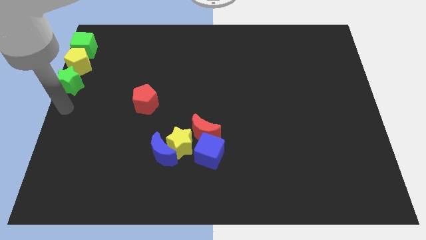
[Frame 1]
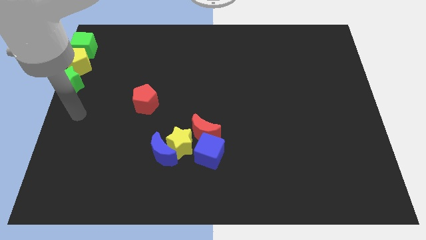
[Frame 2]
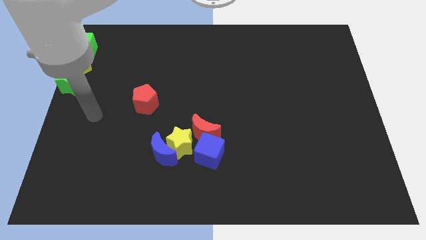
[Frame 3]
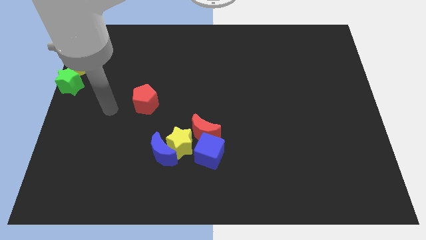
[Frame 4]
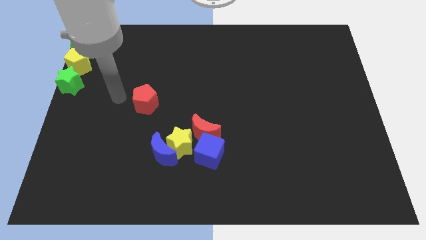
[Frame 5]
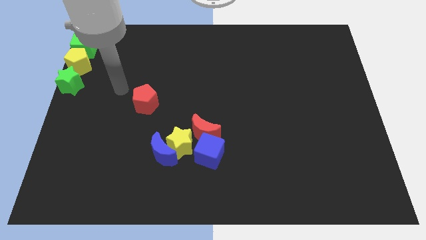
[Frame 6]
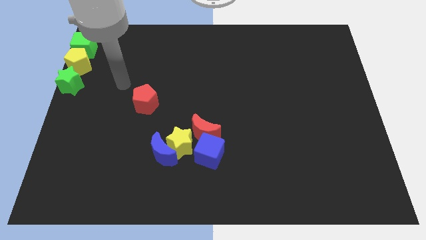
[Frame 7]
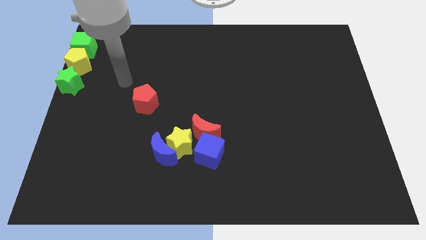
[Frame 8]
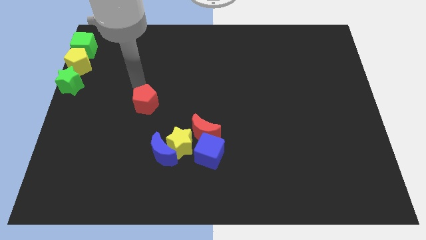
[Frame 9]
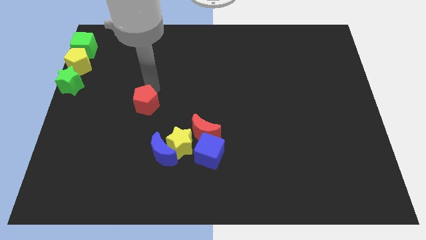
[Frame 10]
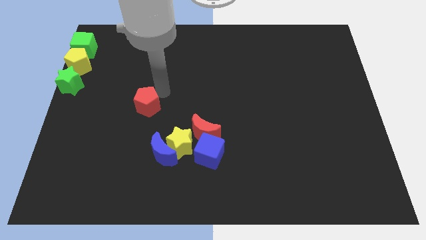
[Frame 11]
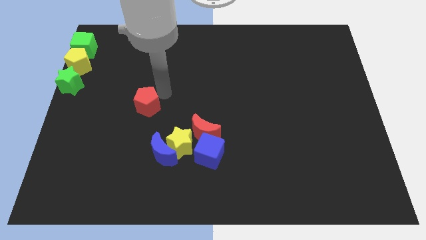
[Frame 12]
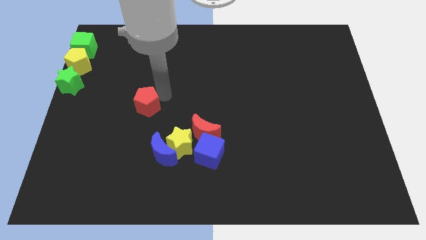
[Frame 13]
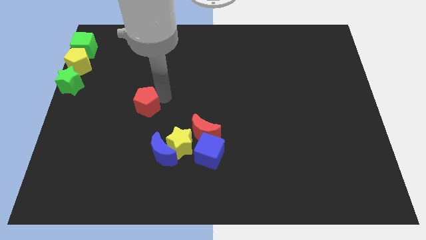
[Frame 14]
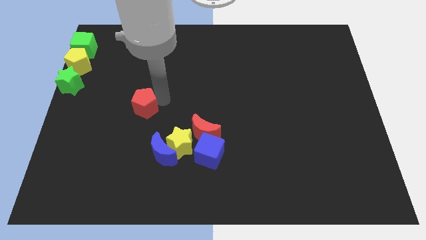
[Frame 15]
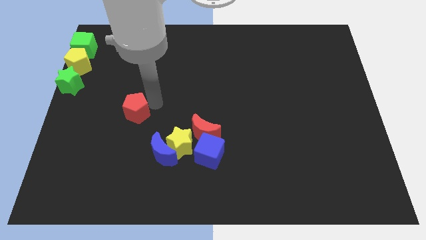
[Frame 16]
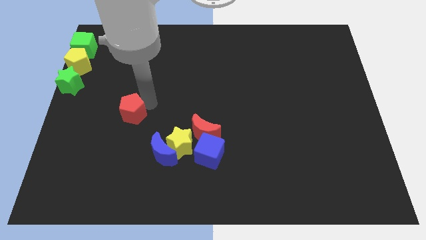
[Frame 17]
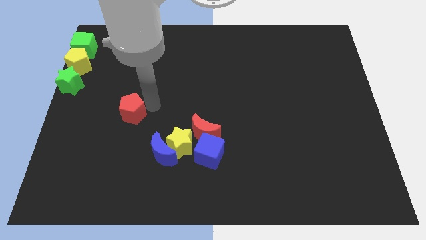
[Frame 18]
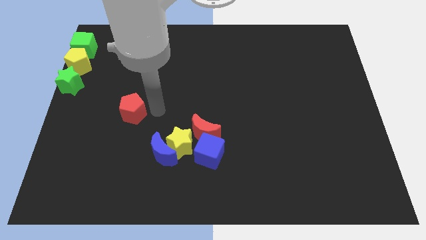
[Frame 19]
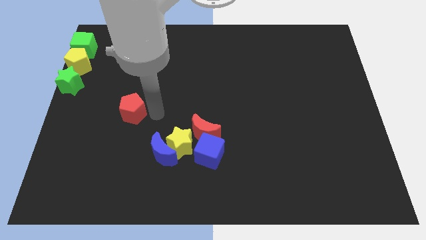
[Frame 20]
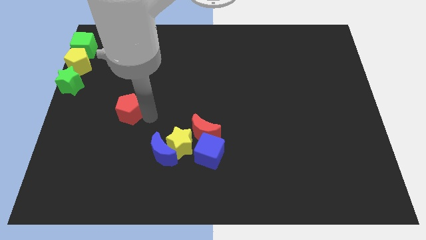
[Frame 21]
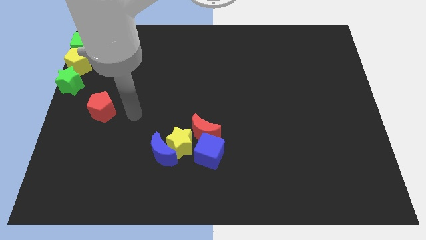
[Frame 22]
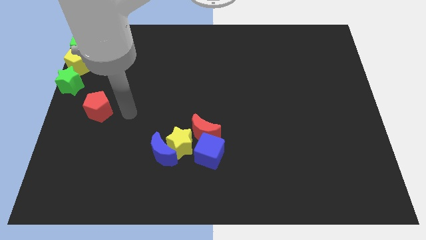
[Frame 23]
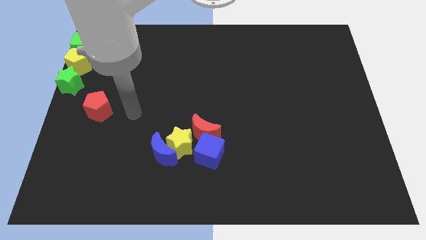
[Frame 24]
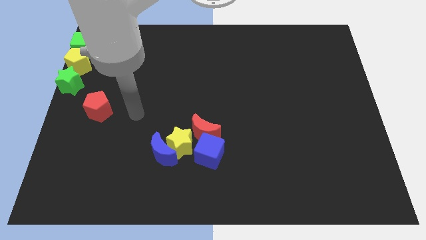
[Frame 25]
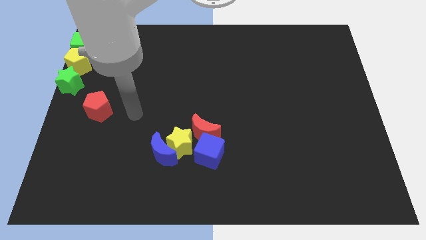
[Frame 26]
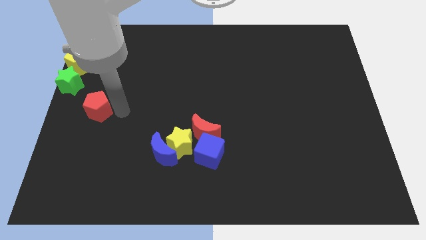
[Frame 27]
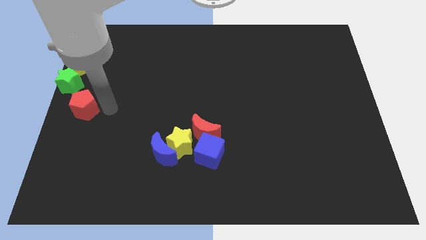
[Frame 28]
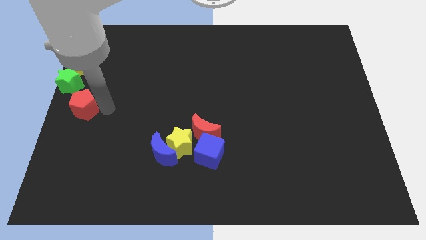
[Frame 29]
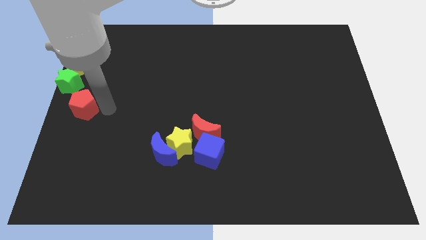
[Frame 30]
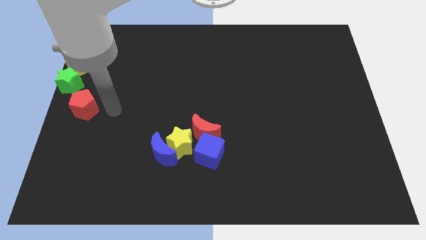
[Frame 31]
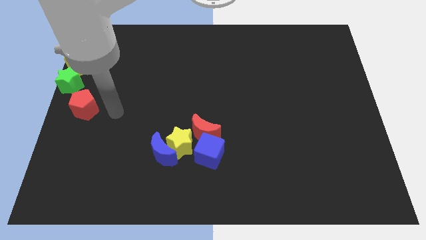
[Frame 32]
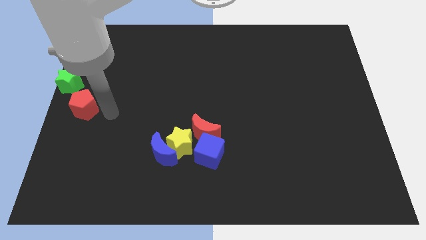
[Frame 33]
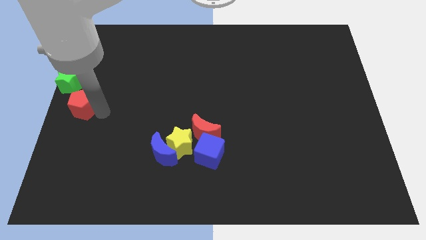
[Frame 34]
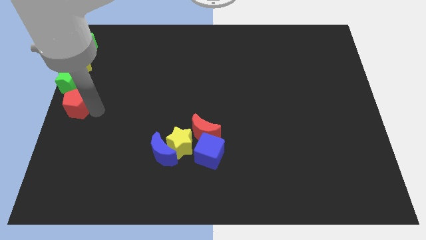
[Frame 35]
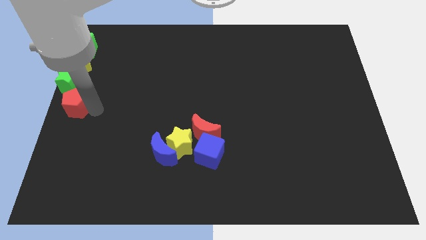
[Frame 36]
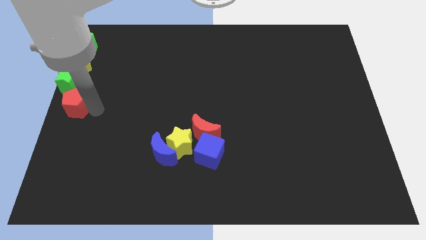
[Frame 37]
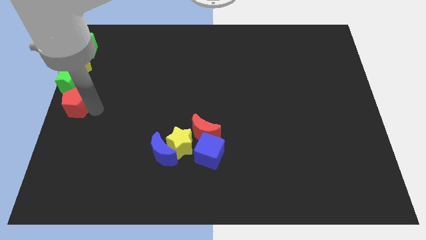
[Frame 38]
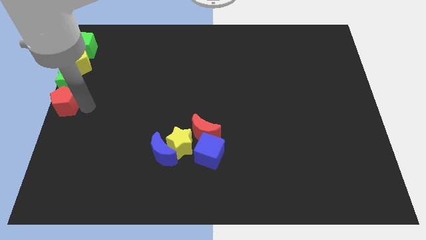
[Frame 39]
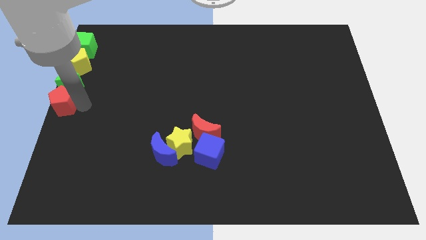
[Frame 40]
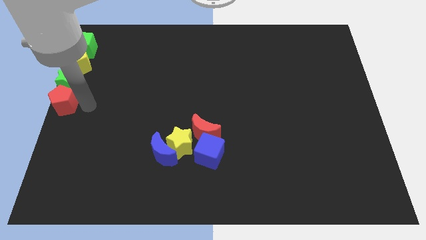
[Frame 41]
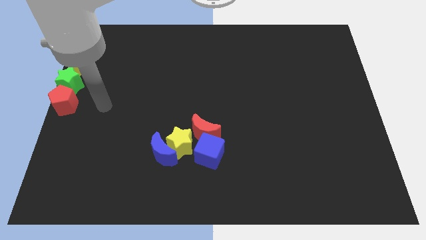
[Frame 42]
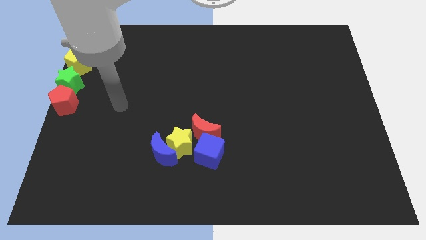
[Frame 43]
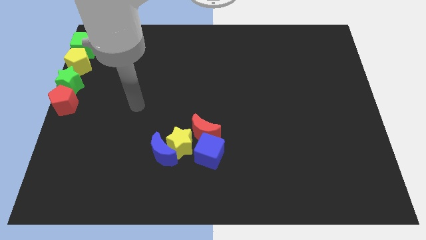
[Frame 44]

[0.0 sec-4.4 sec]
place the red pentagon below the green star

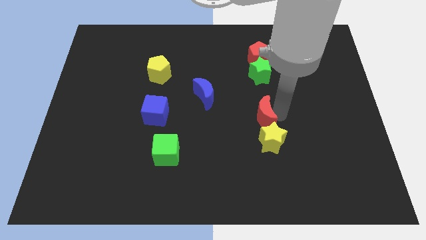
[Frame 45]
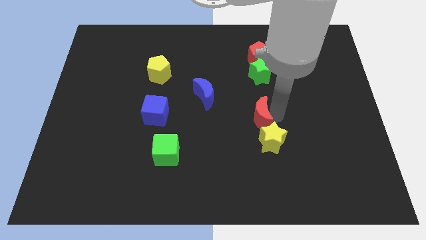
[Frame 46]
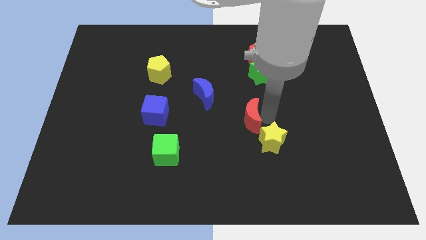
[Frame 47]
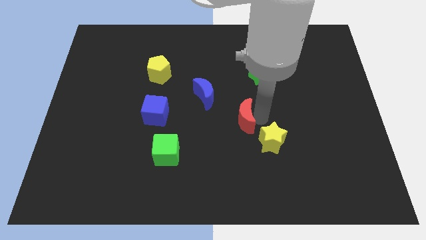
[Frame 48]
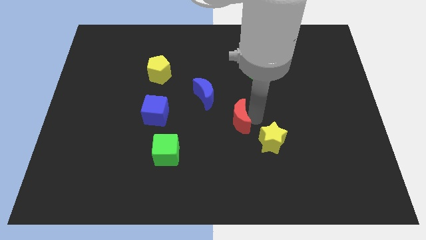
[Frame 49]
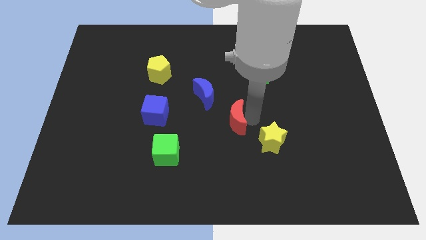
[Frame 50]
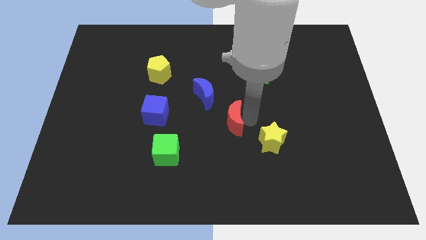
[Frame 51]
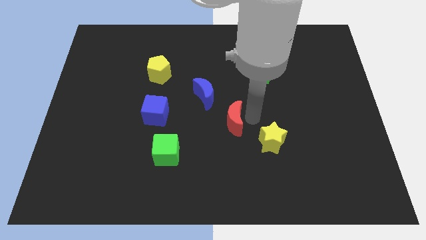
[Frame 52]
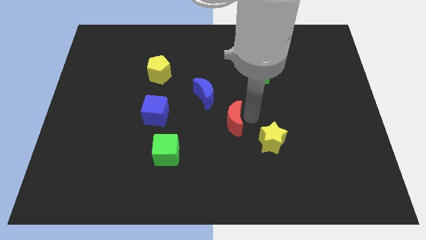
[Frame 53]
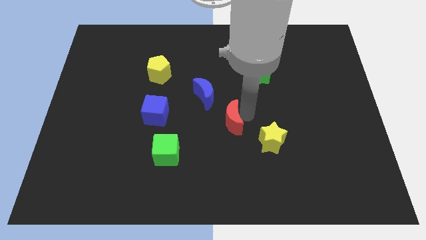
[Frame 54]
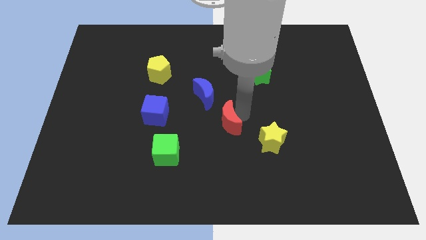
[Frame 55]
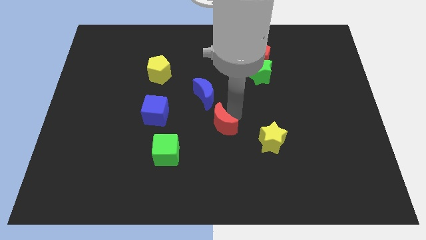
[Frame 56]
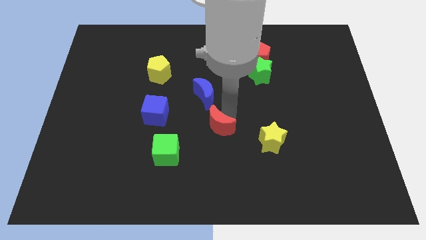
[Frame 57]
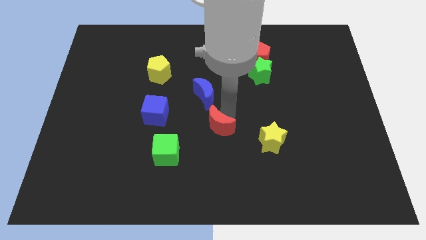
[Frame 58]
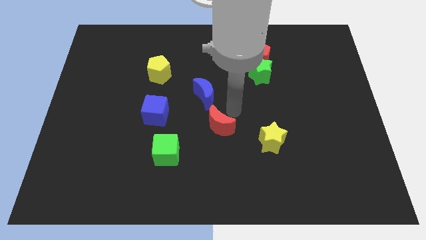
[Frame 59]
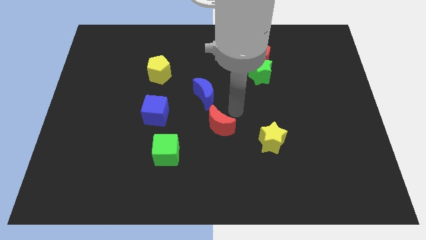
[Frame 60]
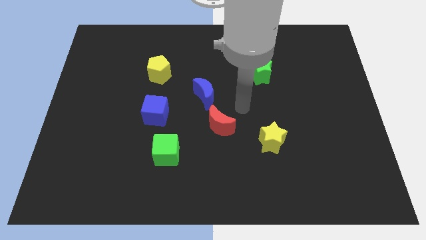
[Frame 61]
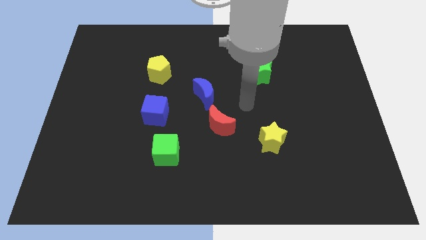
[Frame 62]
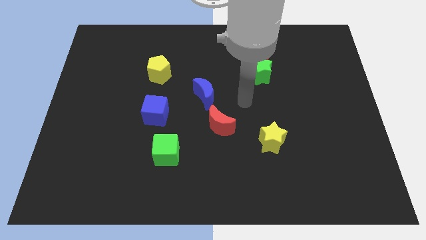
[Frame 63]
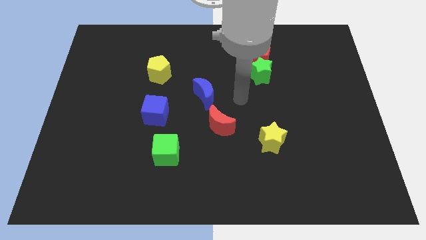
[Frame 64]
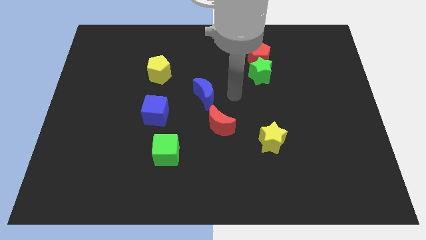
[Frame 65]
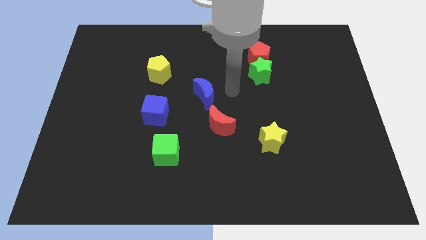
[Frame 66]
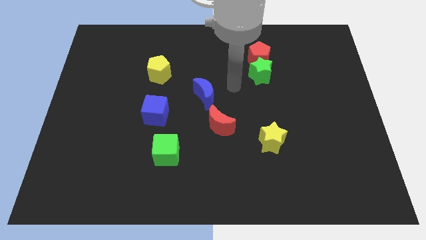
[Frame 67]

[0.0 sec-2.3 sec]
slide the red moon away from the yellow star

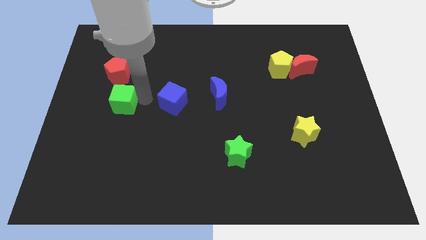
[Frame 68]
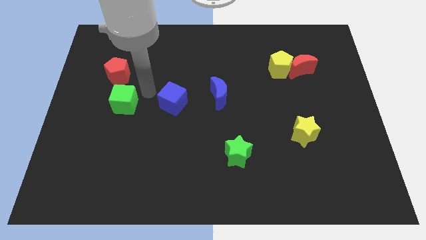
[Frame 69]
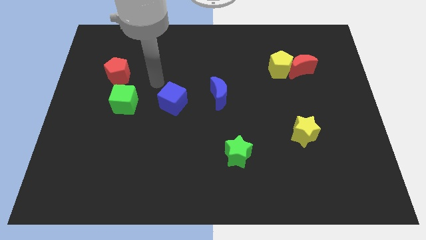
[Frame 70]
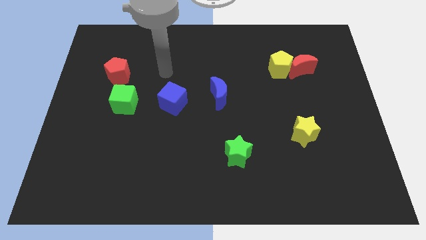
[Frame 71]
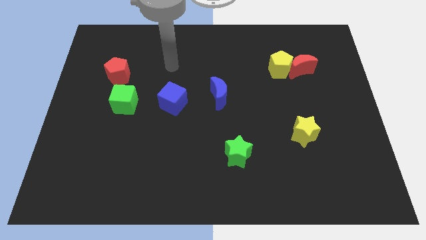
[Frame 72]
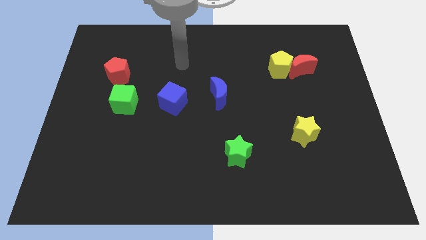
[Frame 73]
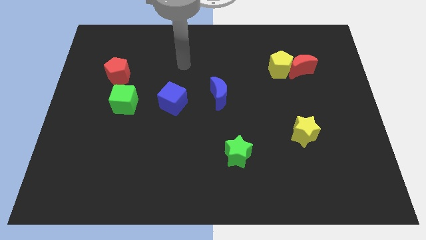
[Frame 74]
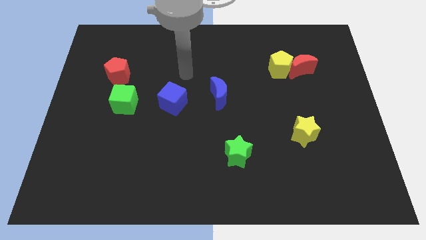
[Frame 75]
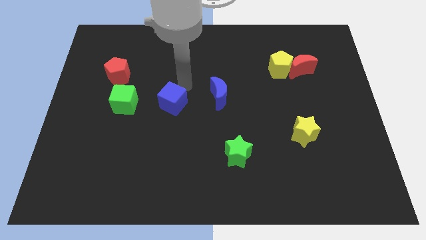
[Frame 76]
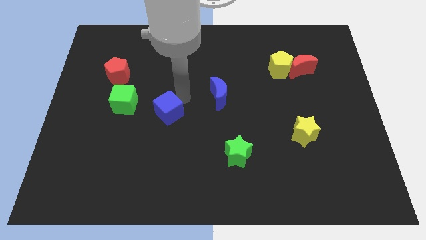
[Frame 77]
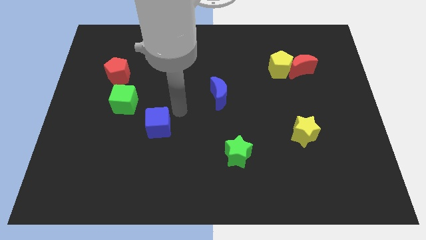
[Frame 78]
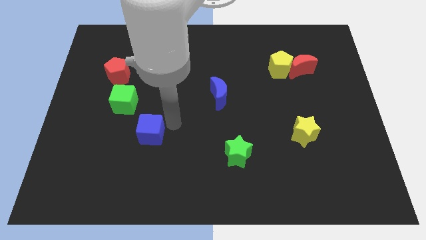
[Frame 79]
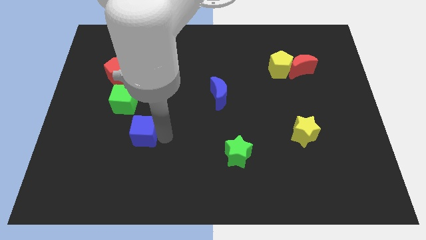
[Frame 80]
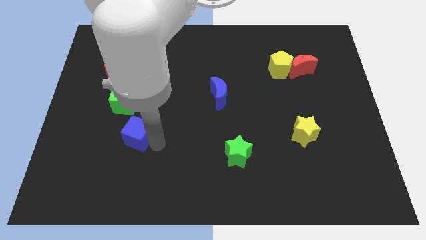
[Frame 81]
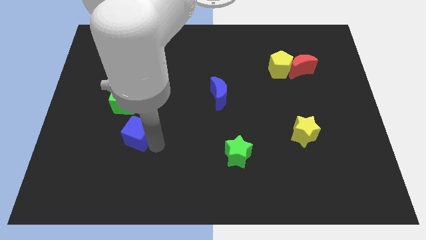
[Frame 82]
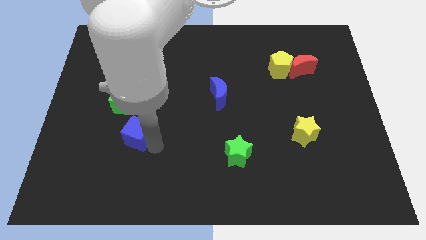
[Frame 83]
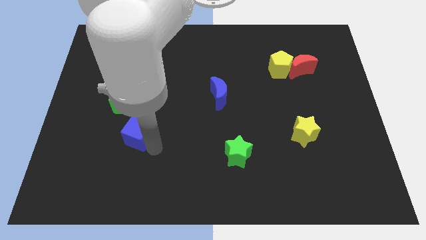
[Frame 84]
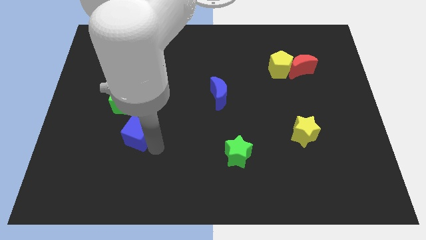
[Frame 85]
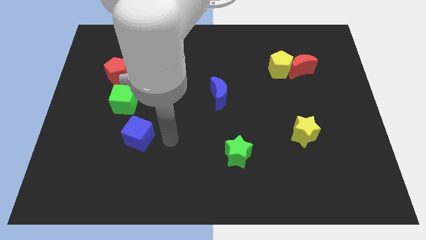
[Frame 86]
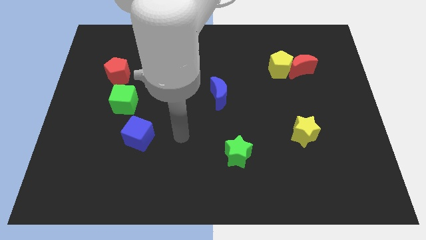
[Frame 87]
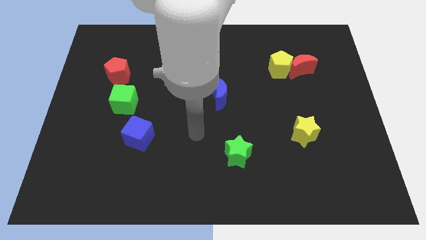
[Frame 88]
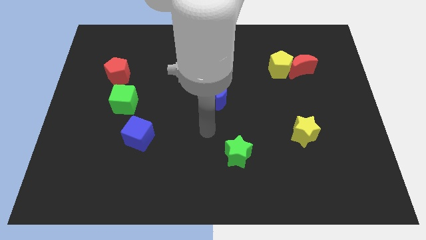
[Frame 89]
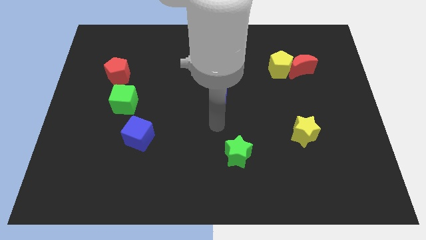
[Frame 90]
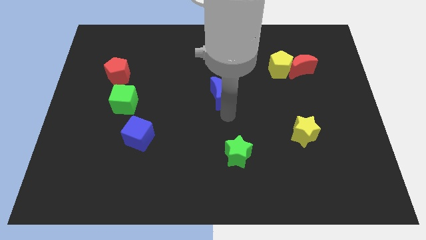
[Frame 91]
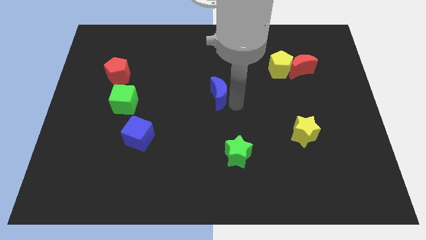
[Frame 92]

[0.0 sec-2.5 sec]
move the blue cube to the bottom of the green cube
